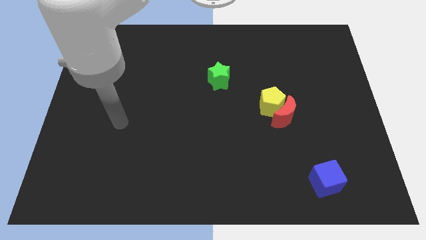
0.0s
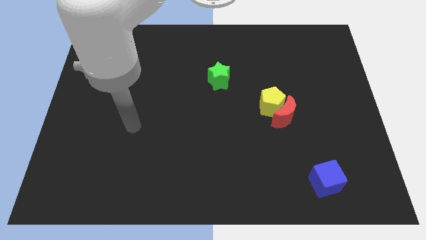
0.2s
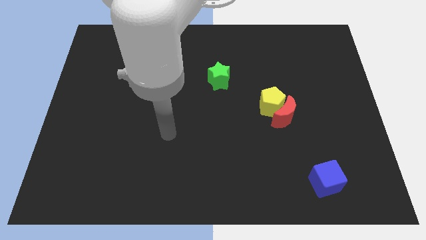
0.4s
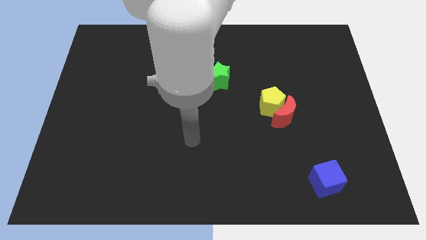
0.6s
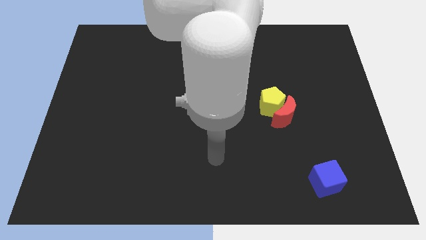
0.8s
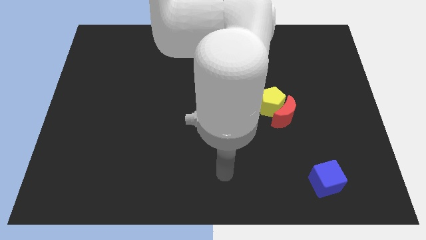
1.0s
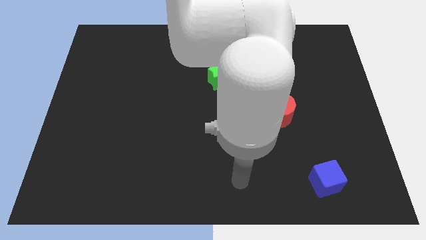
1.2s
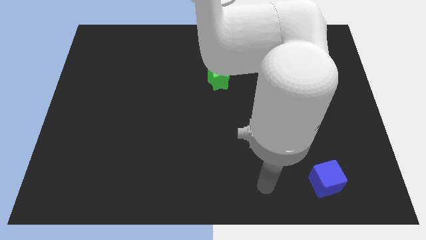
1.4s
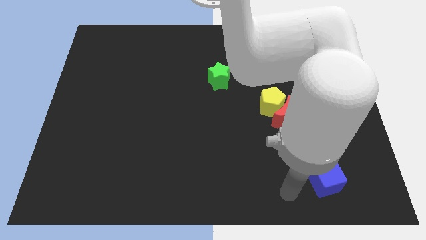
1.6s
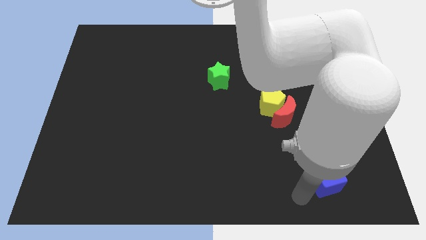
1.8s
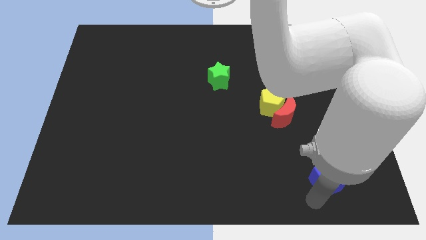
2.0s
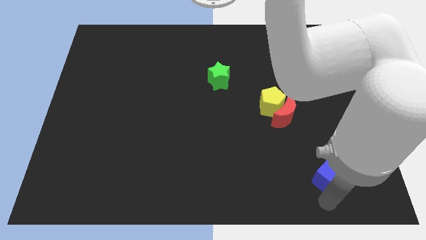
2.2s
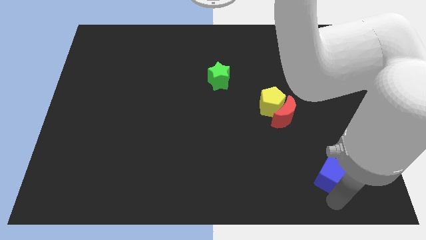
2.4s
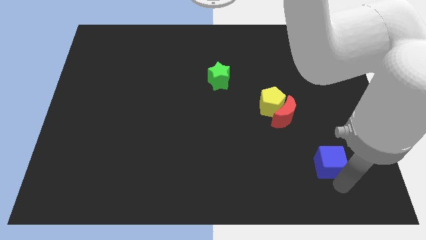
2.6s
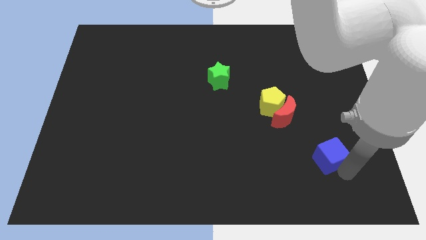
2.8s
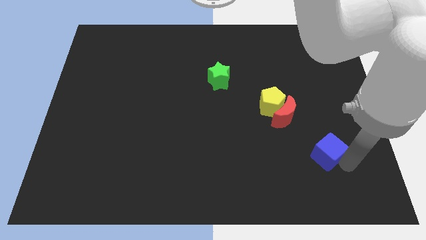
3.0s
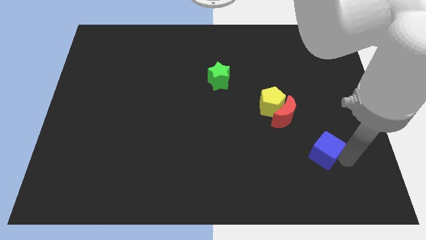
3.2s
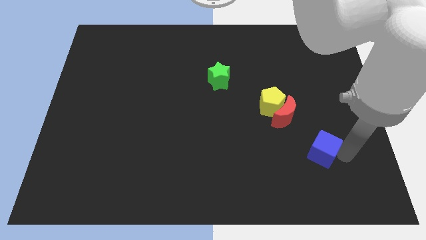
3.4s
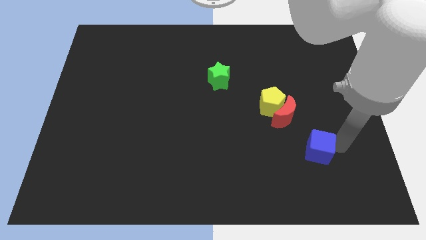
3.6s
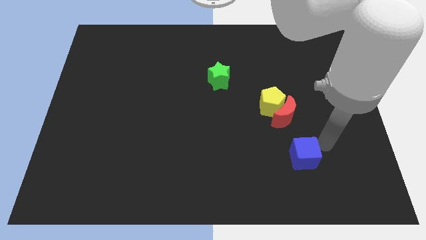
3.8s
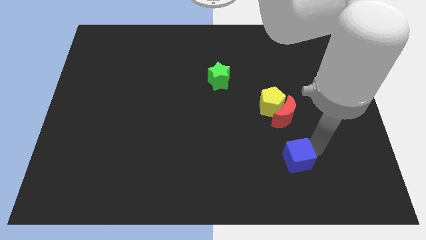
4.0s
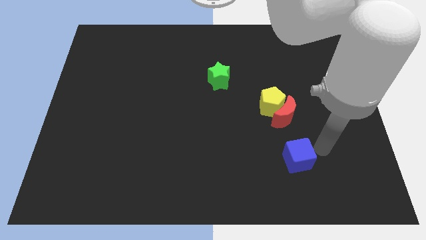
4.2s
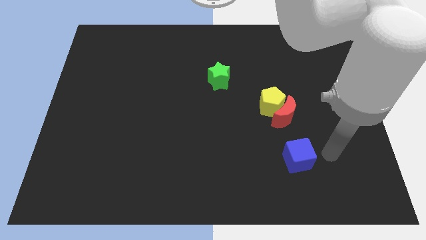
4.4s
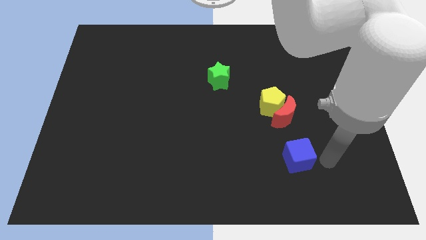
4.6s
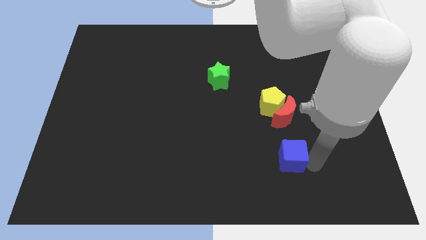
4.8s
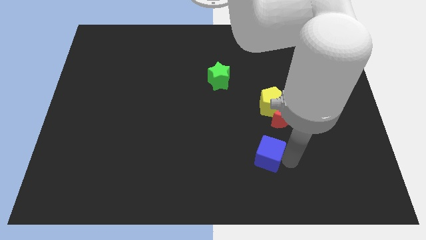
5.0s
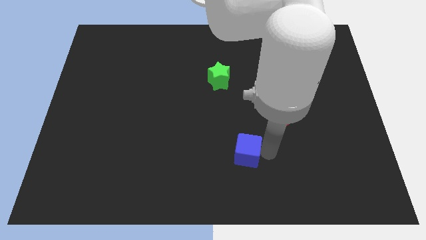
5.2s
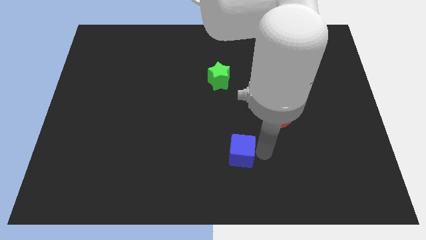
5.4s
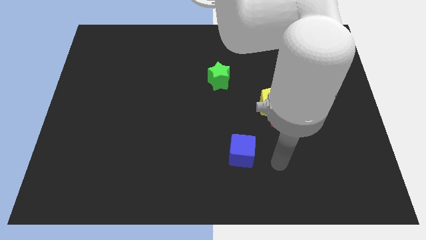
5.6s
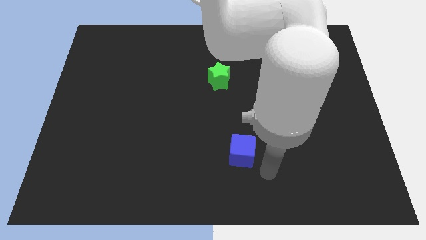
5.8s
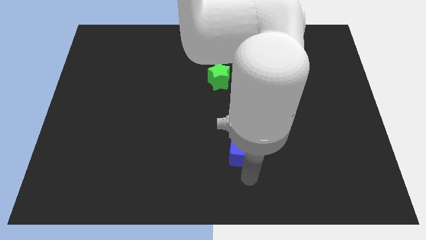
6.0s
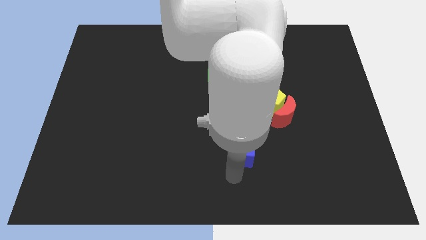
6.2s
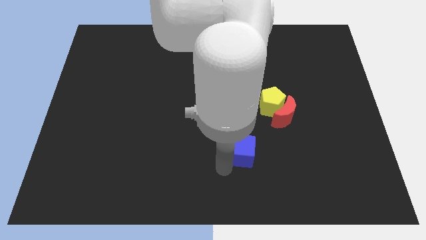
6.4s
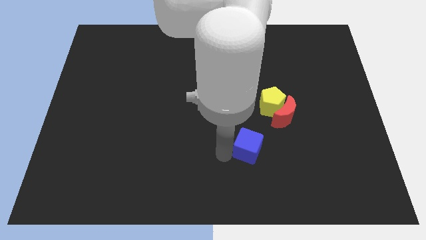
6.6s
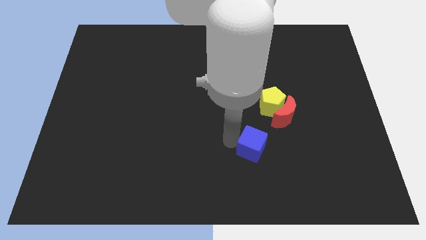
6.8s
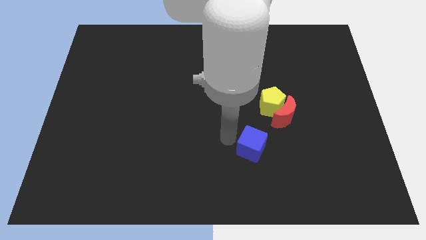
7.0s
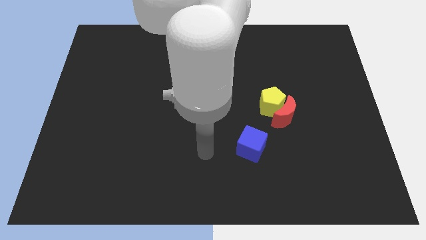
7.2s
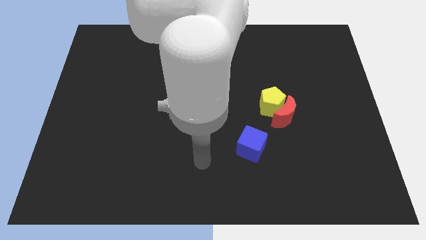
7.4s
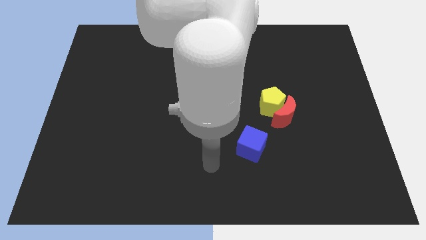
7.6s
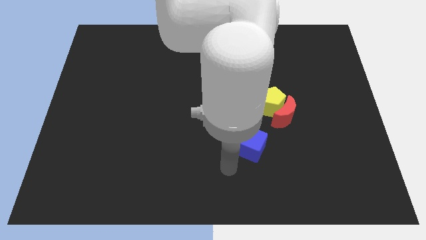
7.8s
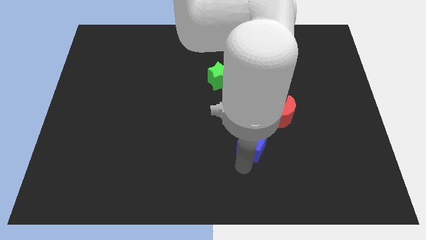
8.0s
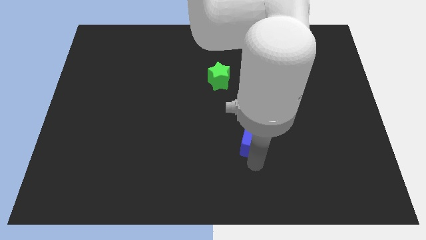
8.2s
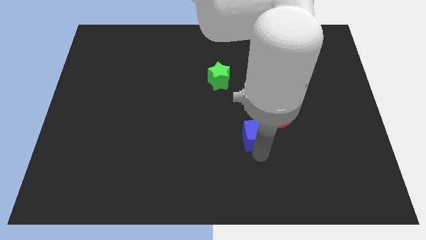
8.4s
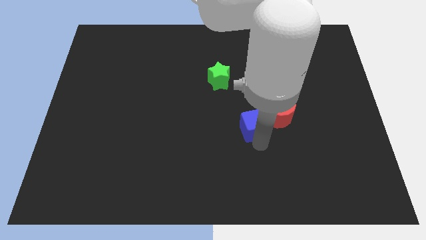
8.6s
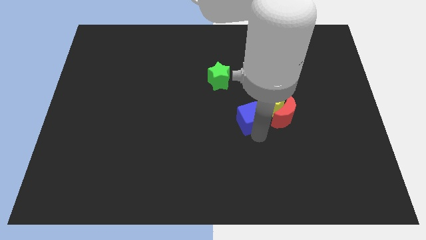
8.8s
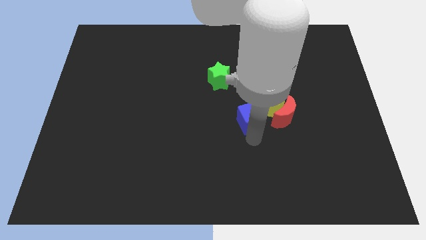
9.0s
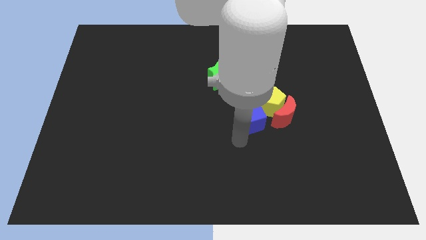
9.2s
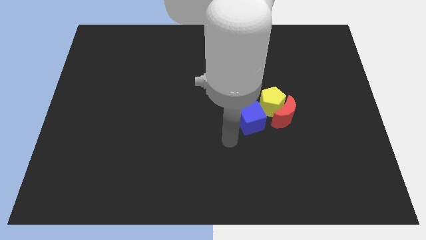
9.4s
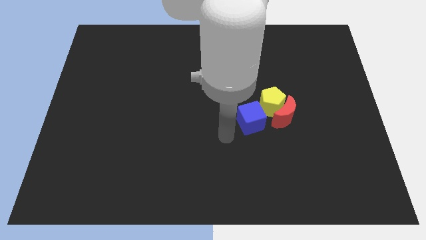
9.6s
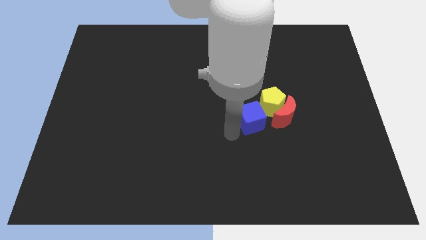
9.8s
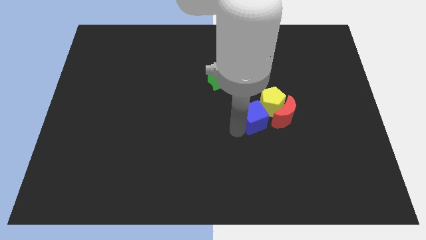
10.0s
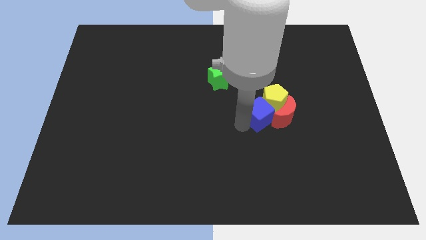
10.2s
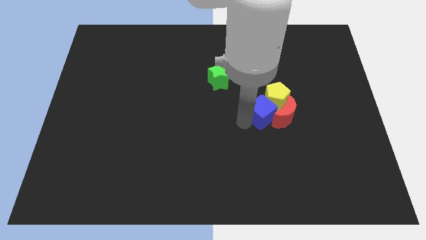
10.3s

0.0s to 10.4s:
push the cube towards the pentagon

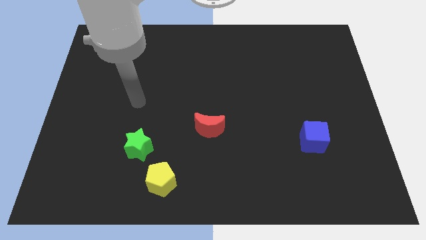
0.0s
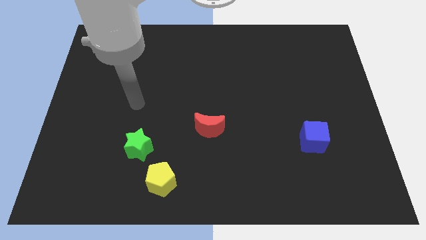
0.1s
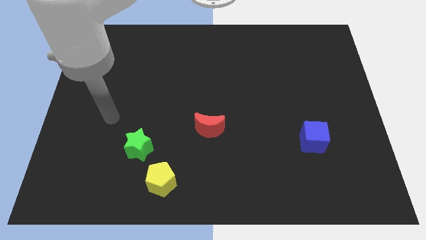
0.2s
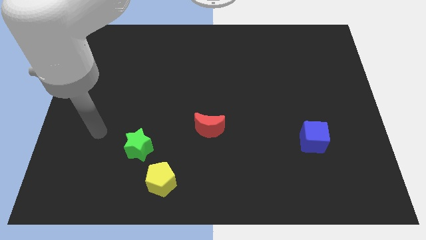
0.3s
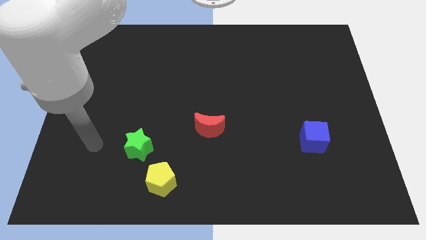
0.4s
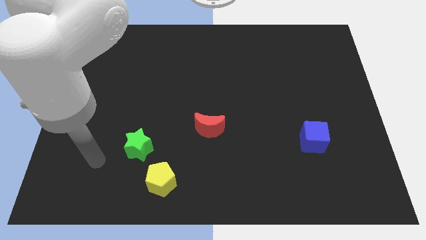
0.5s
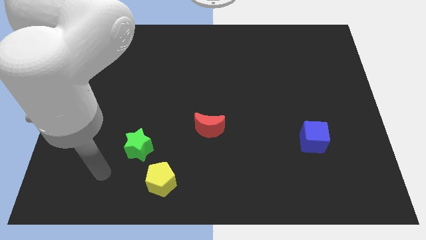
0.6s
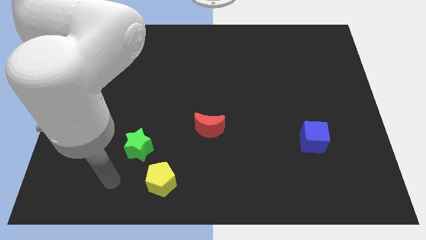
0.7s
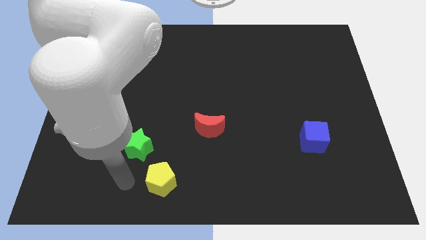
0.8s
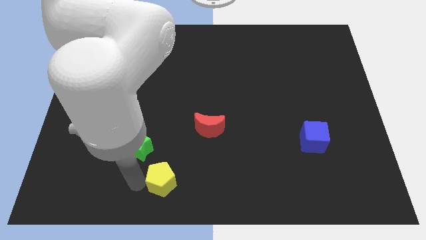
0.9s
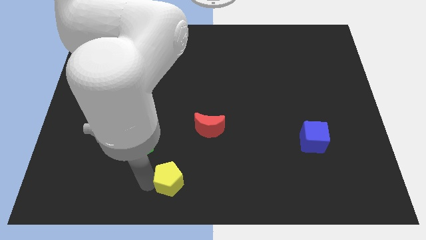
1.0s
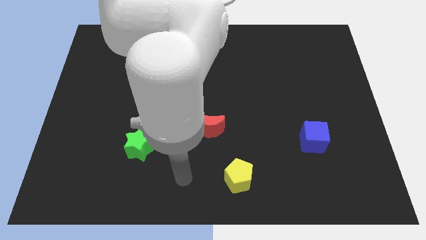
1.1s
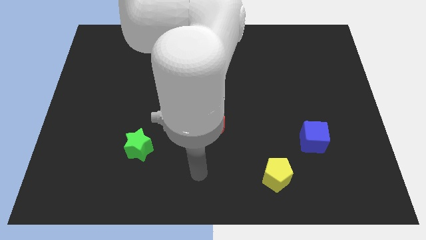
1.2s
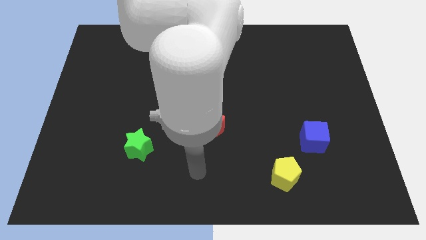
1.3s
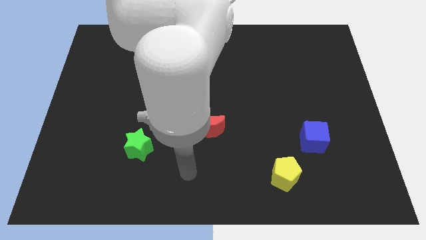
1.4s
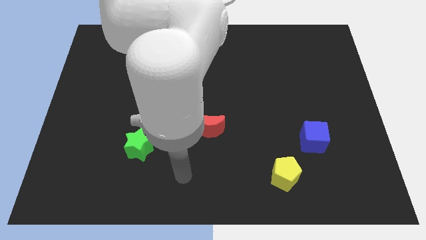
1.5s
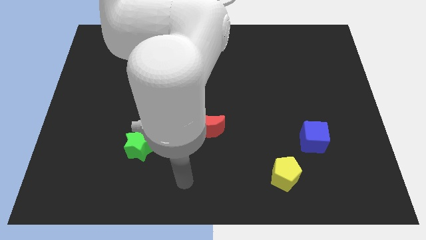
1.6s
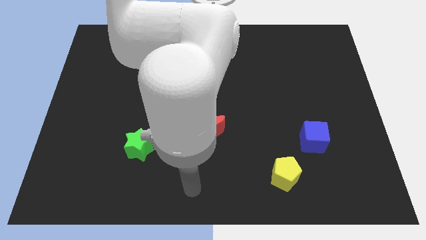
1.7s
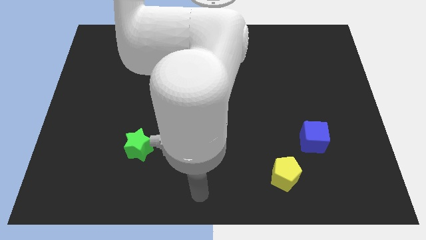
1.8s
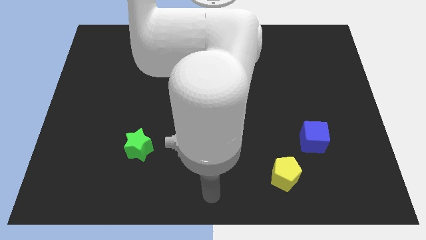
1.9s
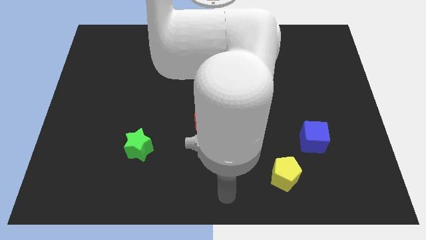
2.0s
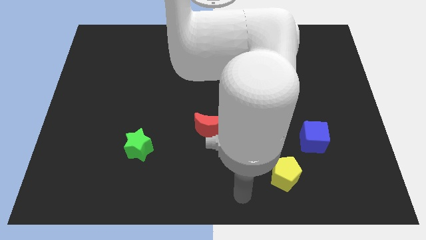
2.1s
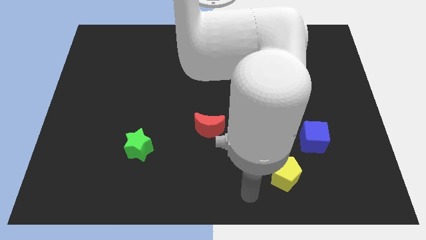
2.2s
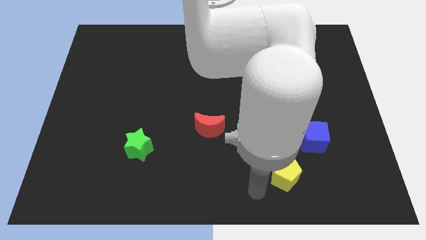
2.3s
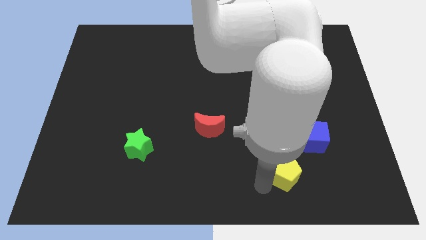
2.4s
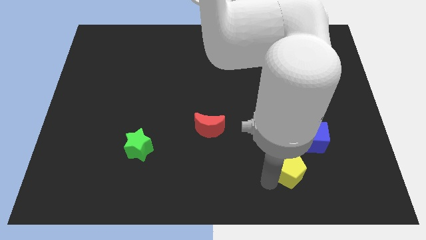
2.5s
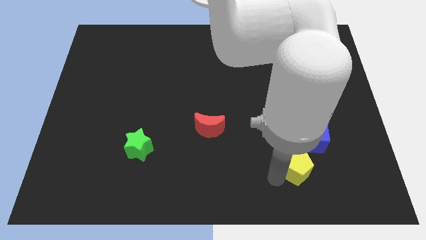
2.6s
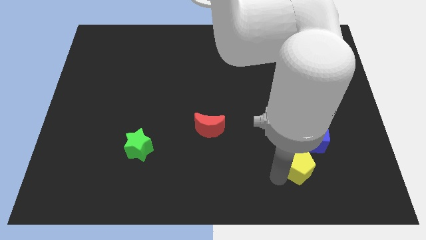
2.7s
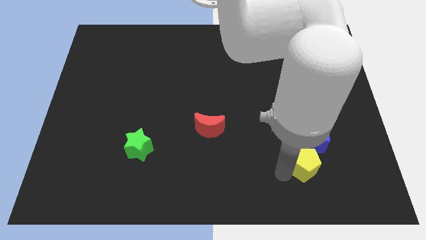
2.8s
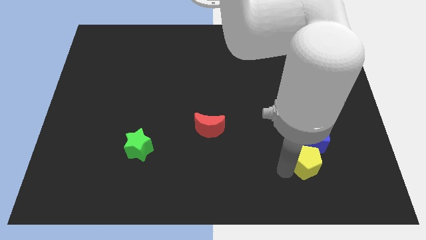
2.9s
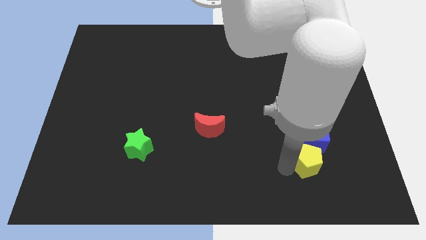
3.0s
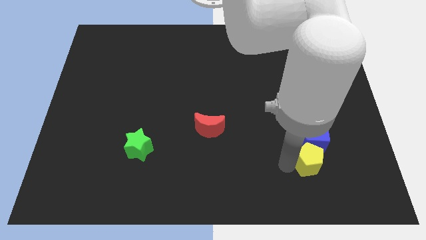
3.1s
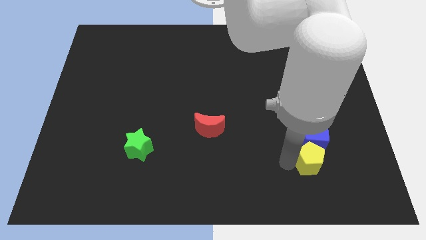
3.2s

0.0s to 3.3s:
move the pentagon to the blue cube
